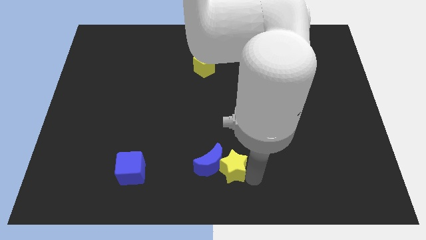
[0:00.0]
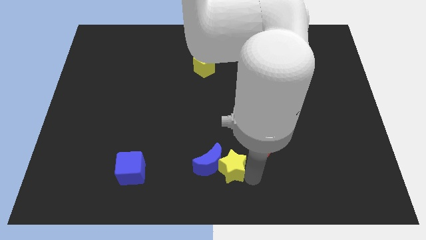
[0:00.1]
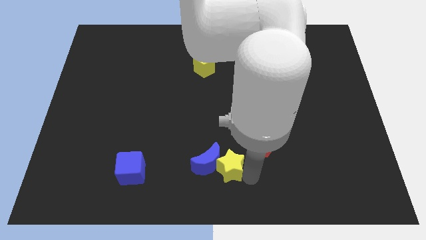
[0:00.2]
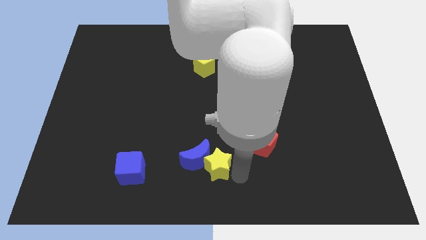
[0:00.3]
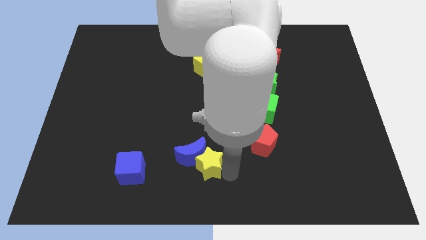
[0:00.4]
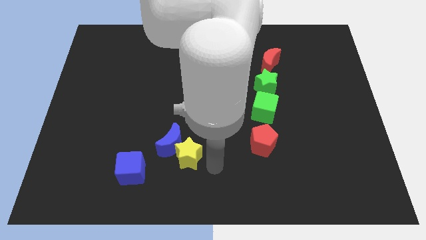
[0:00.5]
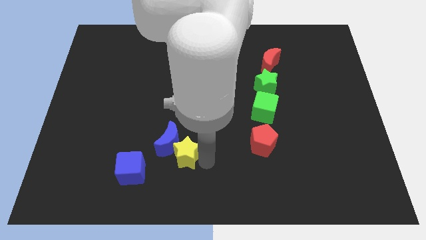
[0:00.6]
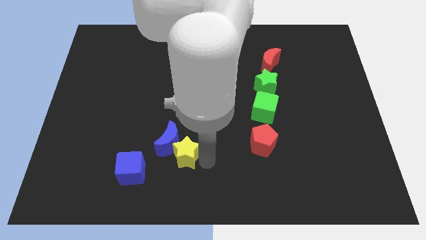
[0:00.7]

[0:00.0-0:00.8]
move the yellow star along with the blue moon towards the center left

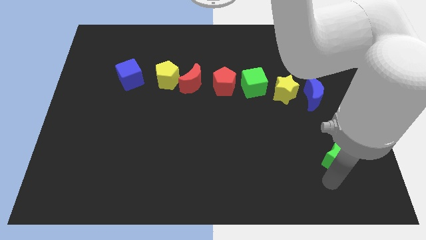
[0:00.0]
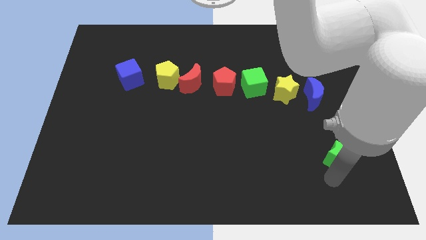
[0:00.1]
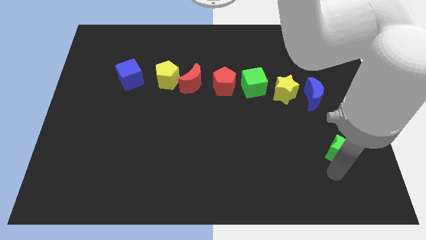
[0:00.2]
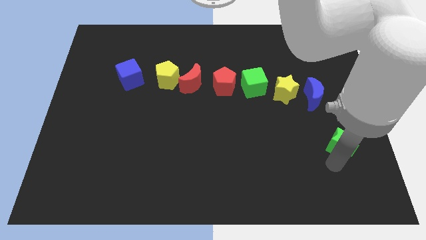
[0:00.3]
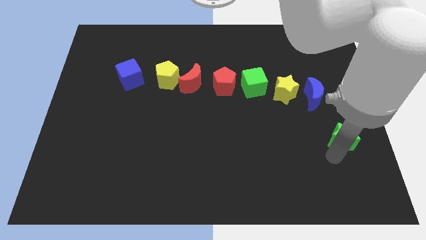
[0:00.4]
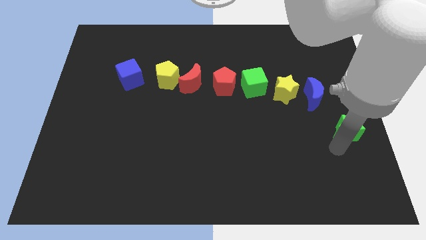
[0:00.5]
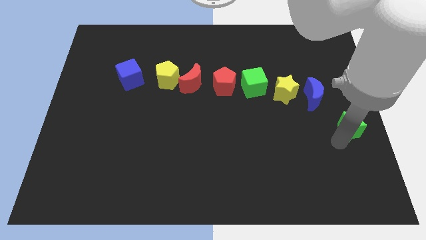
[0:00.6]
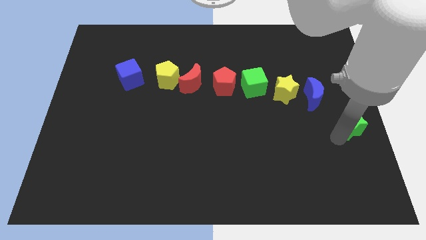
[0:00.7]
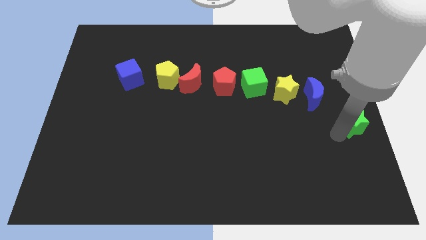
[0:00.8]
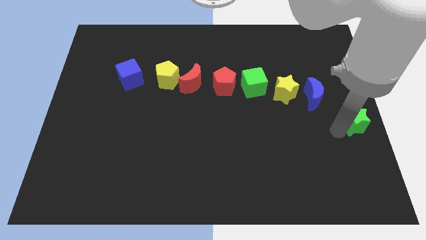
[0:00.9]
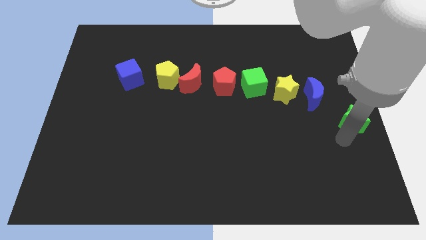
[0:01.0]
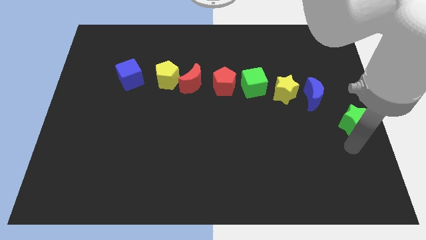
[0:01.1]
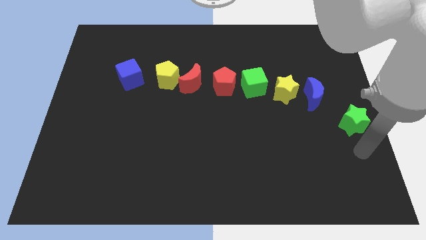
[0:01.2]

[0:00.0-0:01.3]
push the green star upwards

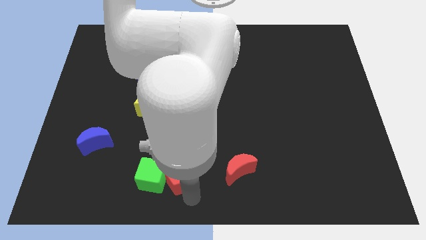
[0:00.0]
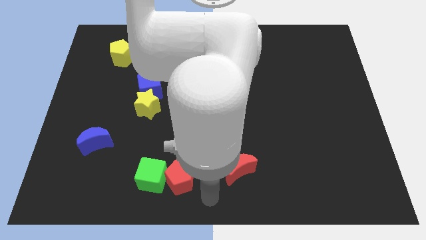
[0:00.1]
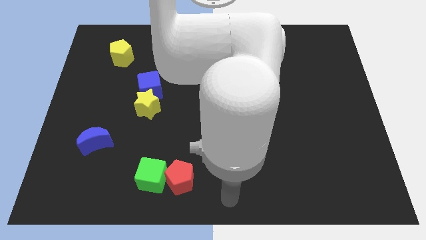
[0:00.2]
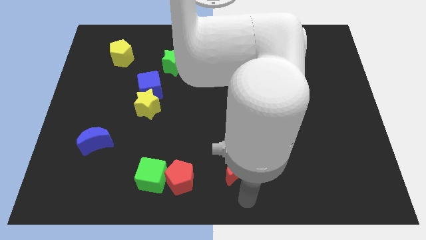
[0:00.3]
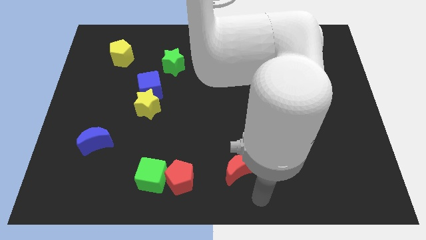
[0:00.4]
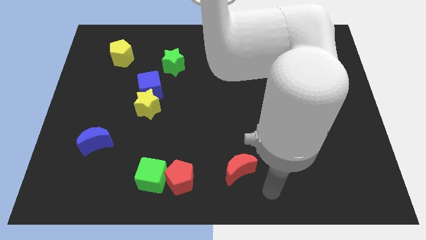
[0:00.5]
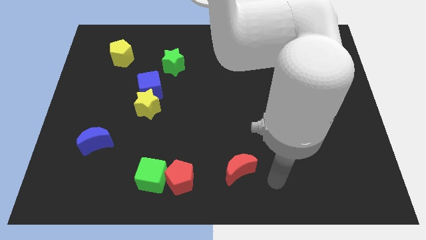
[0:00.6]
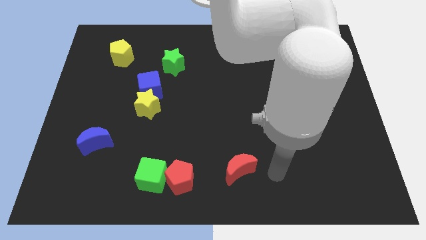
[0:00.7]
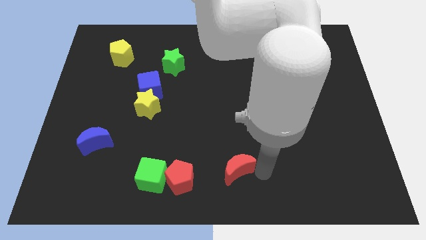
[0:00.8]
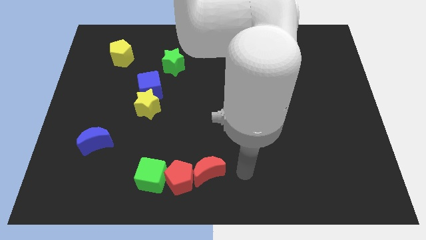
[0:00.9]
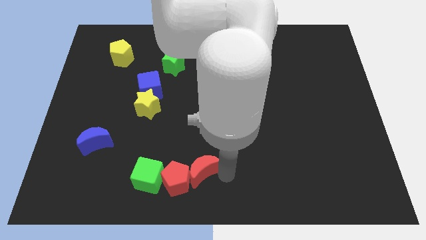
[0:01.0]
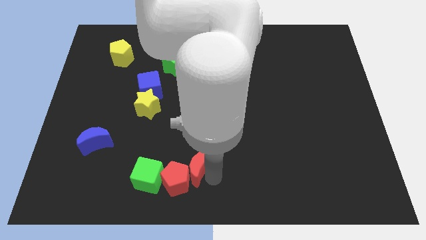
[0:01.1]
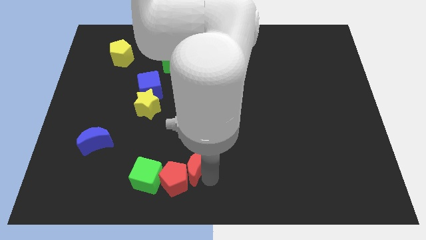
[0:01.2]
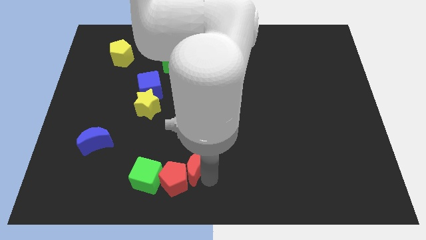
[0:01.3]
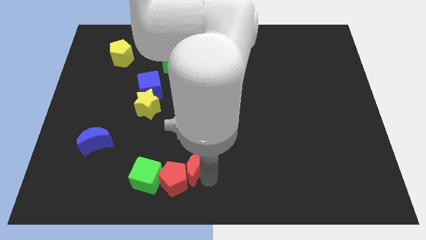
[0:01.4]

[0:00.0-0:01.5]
push red moon into the red pentagon

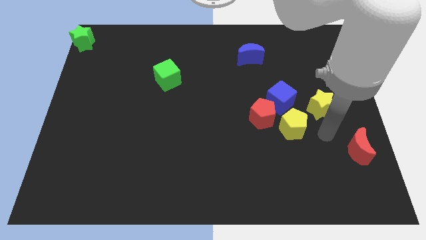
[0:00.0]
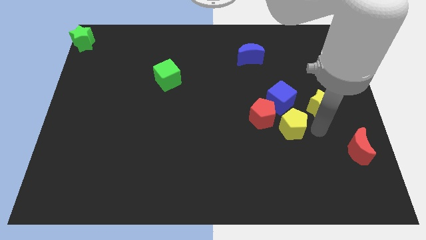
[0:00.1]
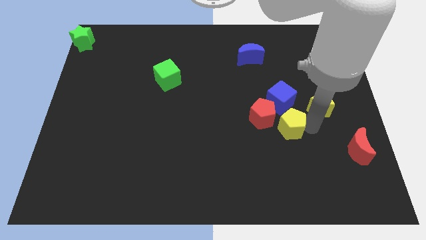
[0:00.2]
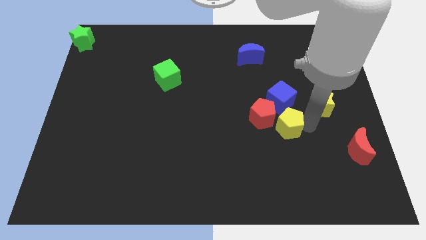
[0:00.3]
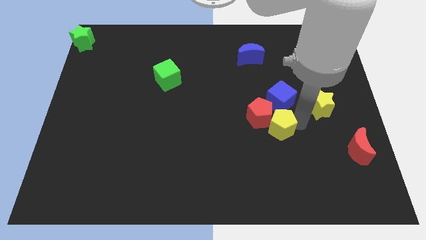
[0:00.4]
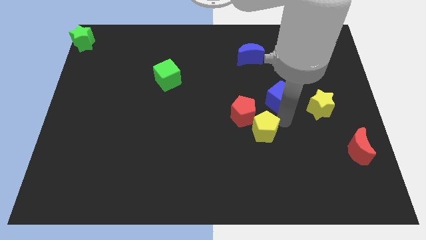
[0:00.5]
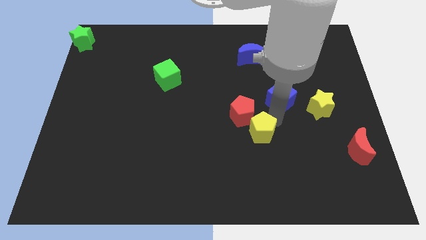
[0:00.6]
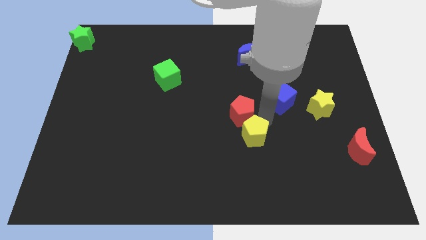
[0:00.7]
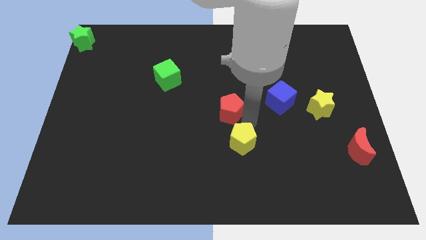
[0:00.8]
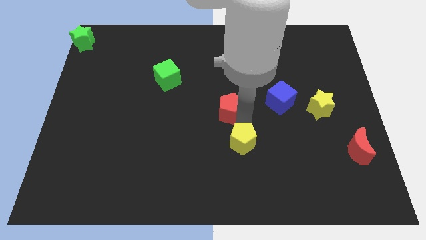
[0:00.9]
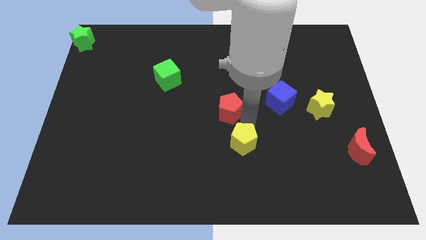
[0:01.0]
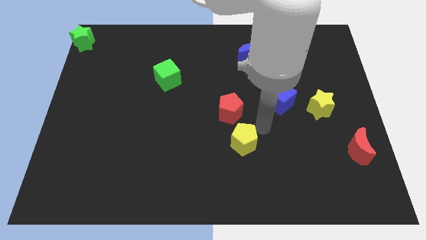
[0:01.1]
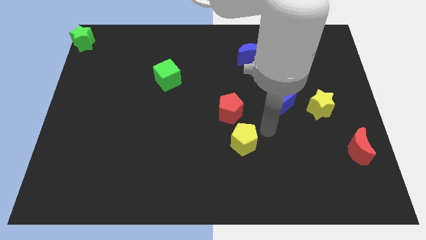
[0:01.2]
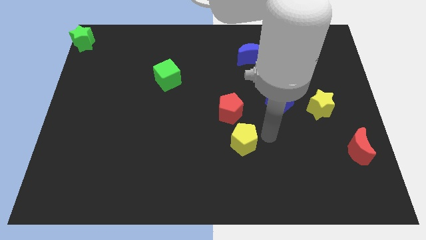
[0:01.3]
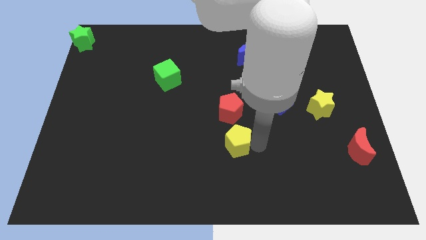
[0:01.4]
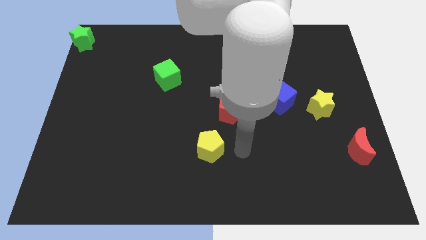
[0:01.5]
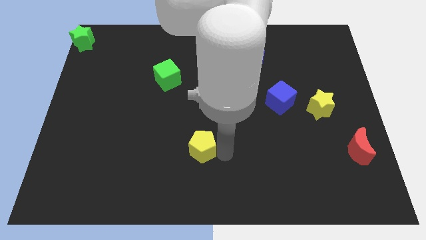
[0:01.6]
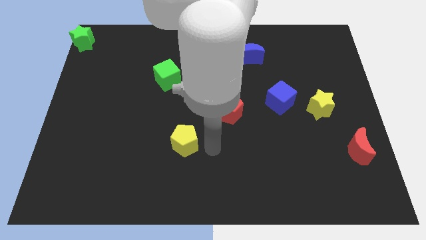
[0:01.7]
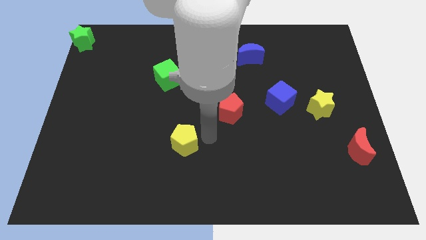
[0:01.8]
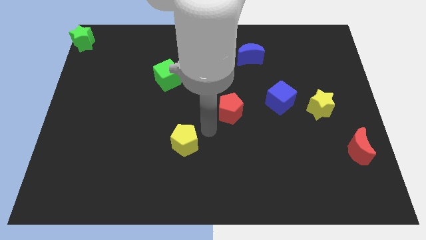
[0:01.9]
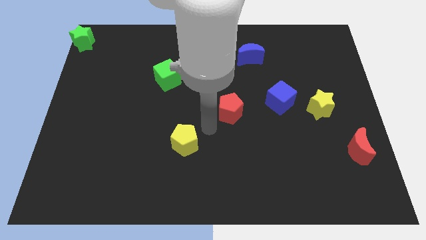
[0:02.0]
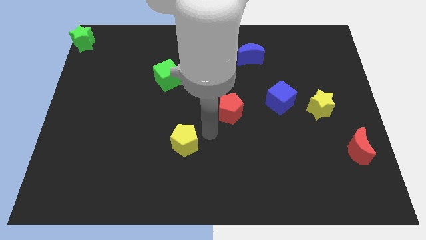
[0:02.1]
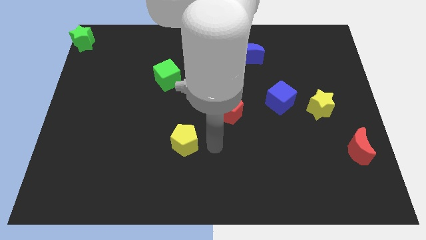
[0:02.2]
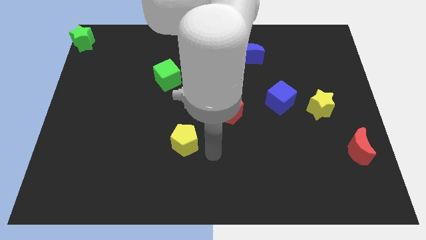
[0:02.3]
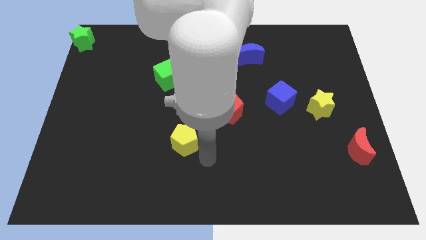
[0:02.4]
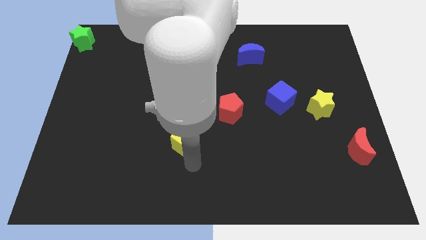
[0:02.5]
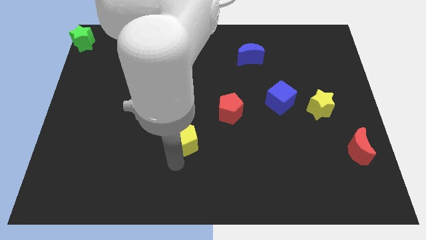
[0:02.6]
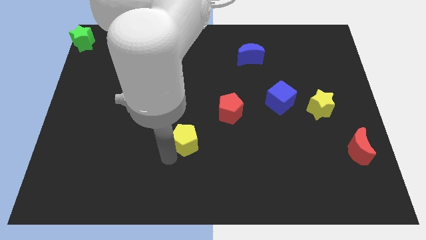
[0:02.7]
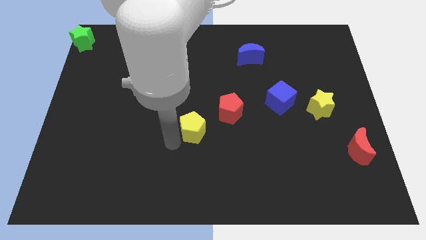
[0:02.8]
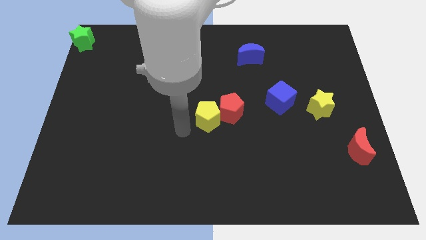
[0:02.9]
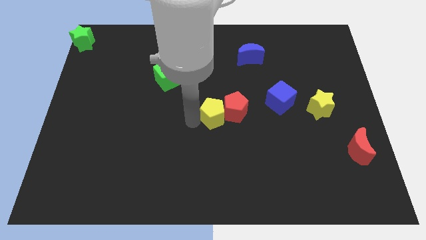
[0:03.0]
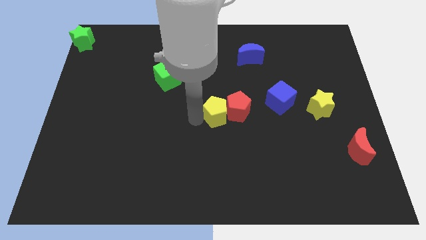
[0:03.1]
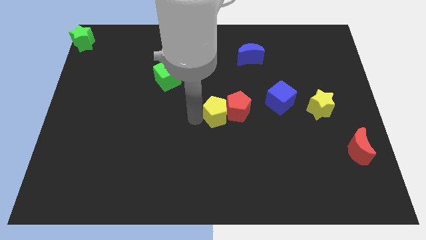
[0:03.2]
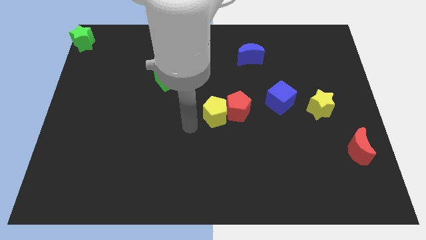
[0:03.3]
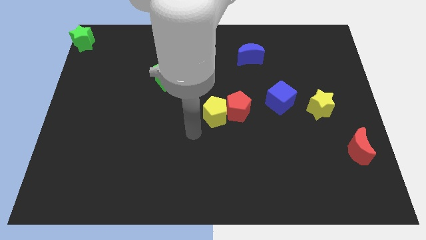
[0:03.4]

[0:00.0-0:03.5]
move yellow pentagon left beside the red pentagon

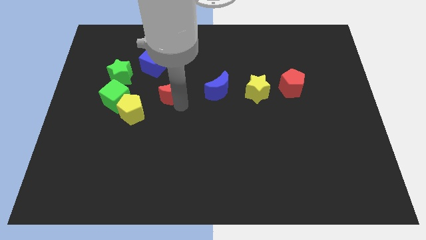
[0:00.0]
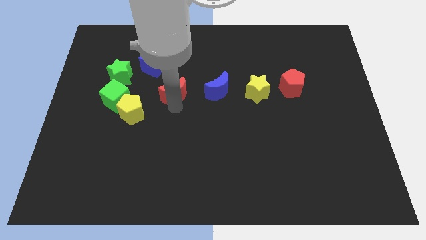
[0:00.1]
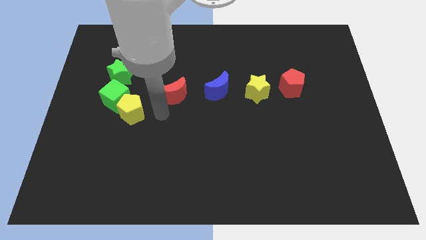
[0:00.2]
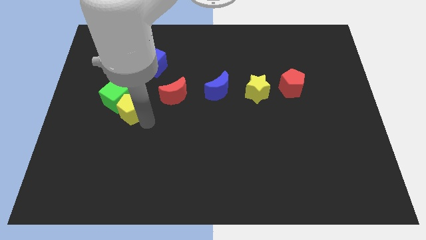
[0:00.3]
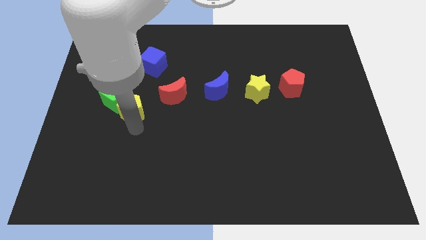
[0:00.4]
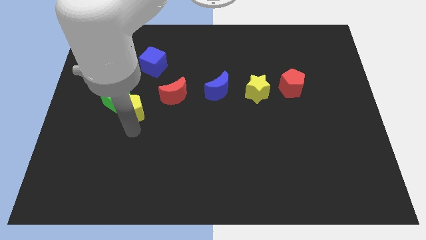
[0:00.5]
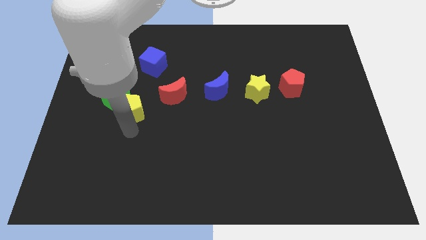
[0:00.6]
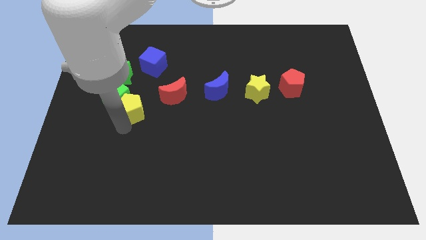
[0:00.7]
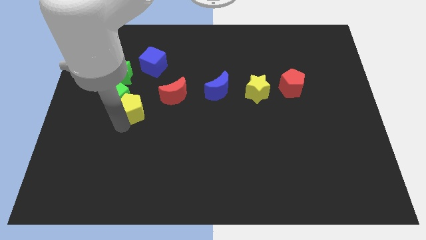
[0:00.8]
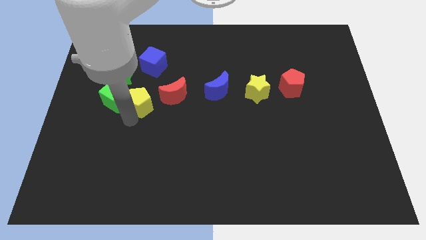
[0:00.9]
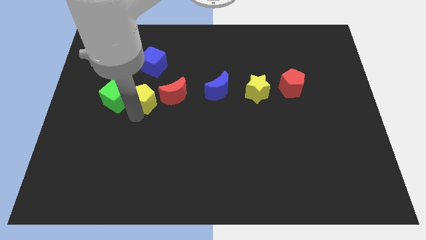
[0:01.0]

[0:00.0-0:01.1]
push the yellow pentagon to the right of green cube

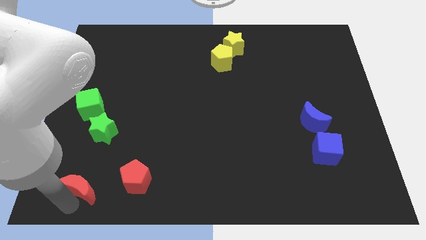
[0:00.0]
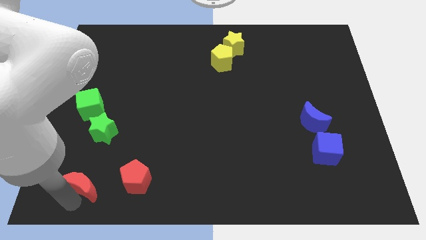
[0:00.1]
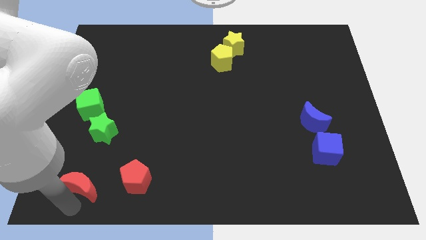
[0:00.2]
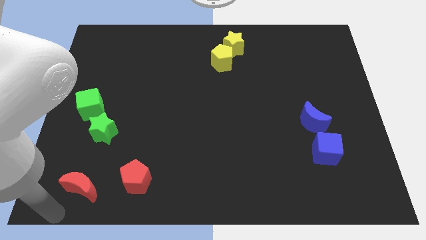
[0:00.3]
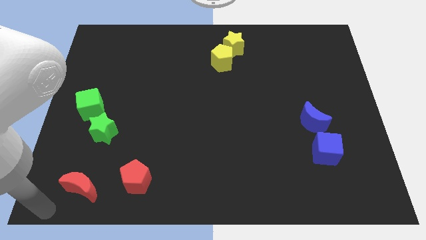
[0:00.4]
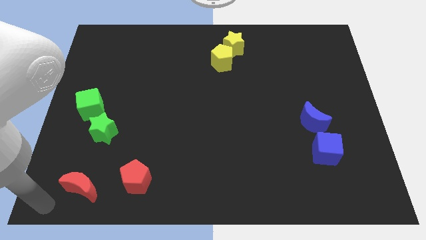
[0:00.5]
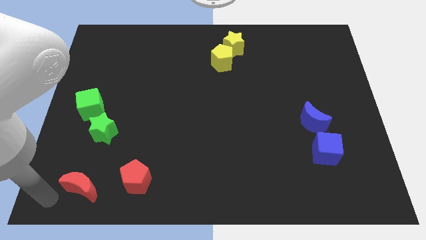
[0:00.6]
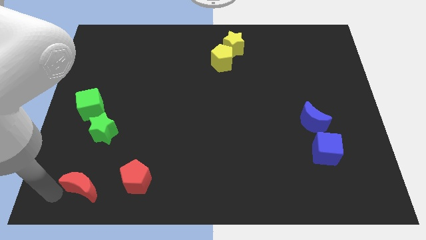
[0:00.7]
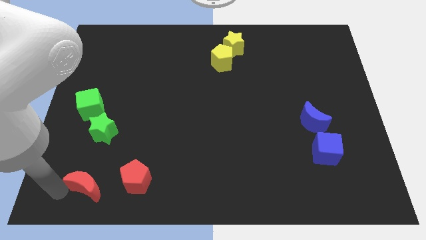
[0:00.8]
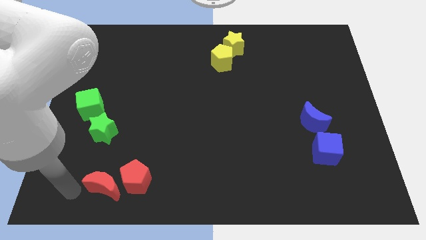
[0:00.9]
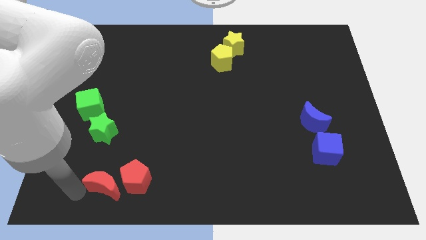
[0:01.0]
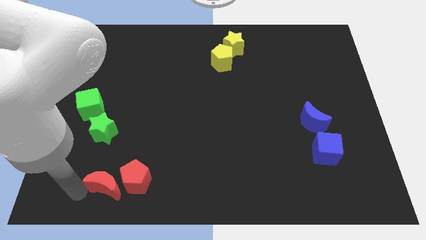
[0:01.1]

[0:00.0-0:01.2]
move the red crescent to the left of red pentagon
